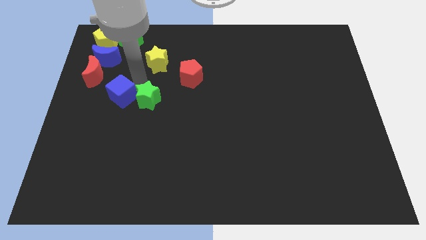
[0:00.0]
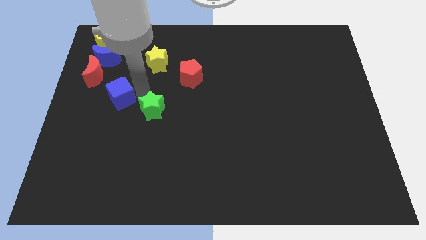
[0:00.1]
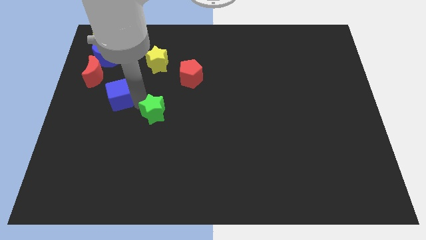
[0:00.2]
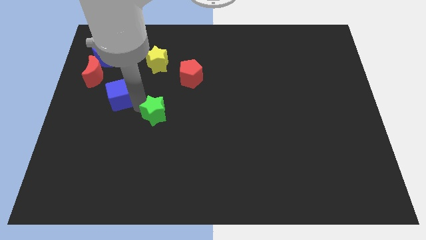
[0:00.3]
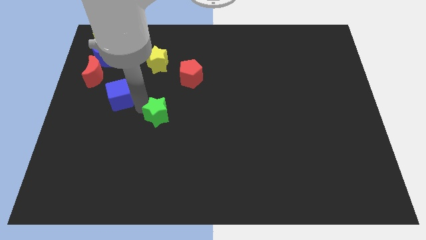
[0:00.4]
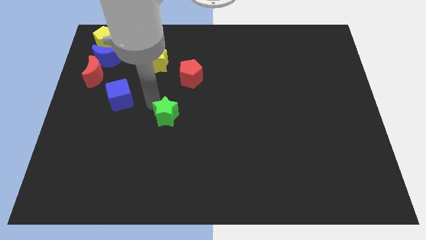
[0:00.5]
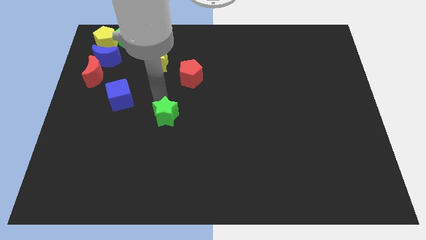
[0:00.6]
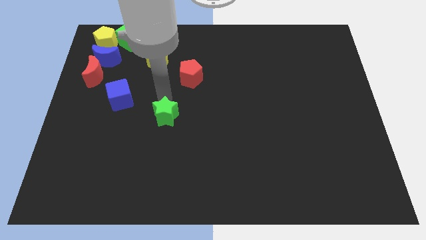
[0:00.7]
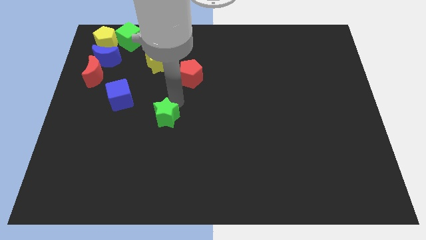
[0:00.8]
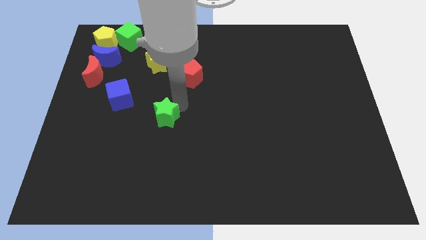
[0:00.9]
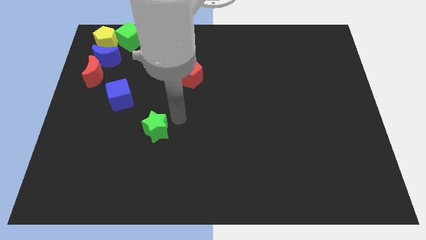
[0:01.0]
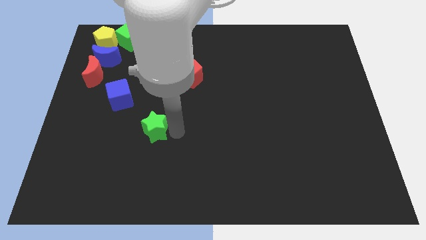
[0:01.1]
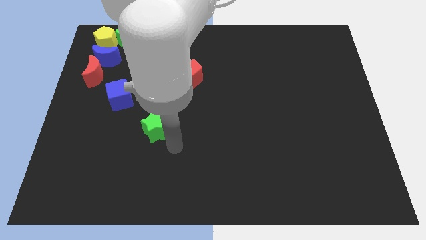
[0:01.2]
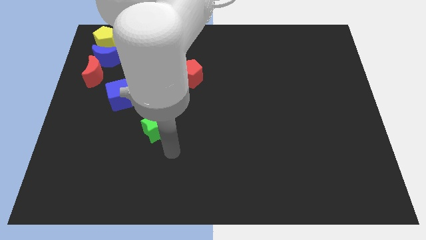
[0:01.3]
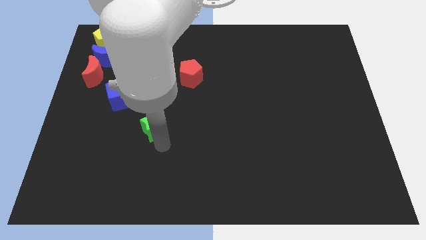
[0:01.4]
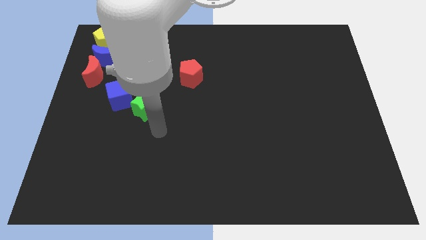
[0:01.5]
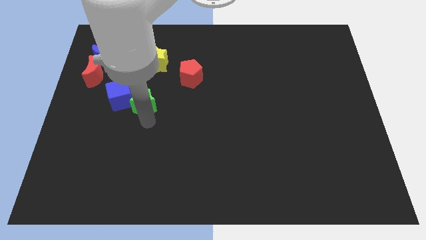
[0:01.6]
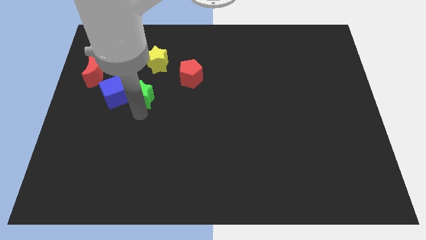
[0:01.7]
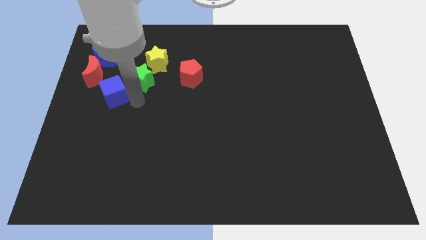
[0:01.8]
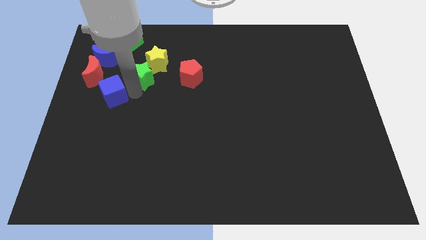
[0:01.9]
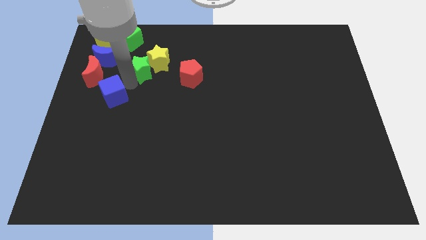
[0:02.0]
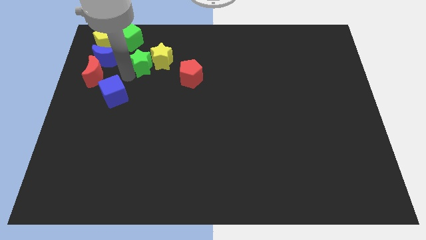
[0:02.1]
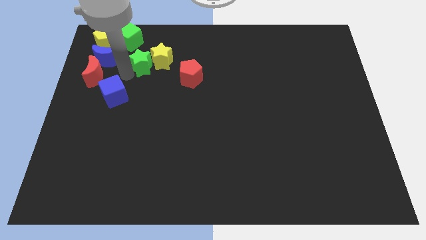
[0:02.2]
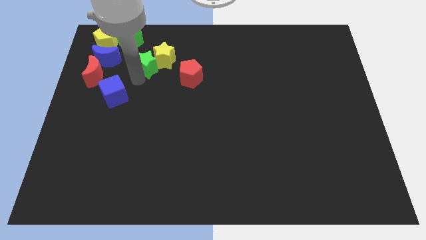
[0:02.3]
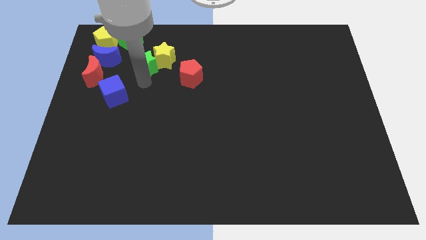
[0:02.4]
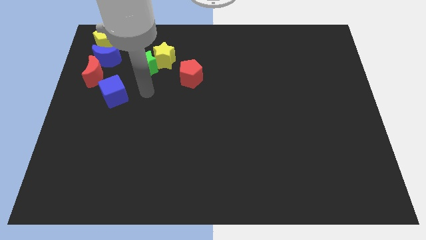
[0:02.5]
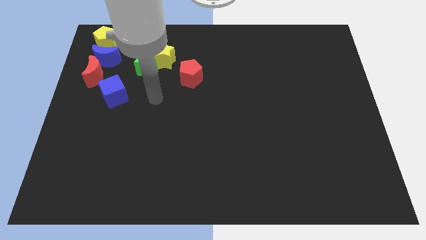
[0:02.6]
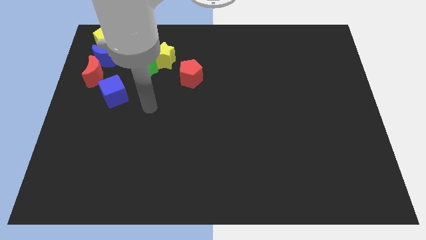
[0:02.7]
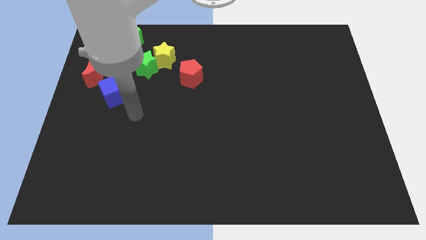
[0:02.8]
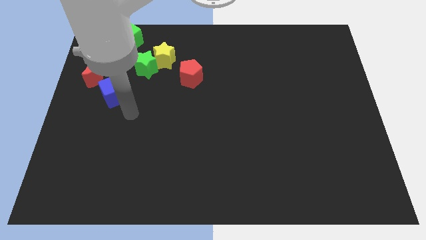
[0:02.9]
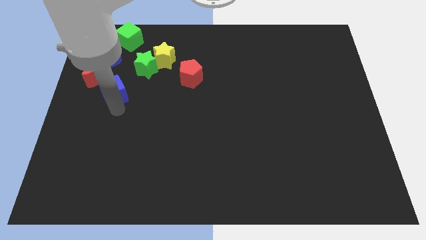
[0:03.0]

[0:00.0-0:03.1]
move the green star below the green cube

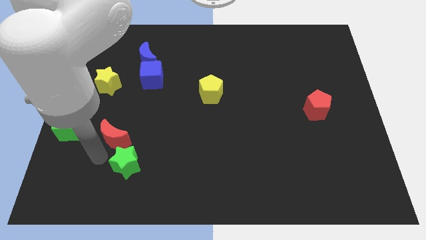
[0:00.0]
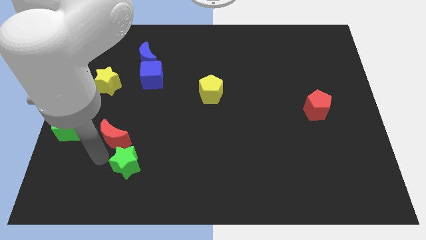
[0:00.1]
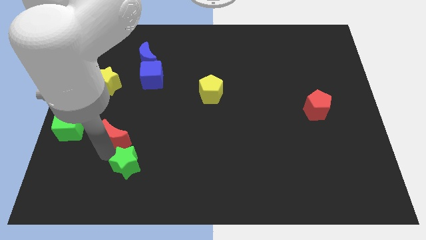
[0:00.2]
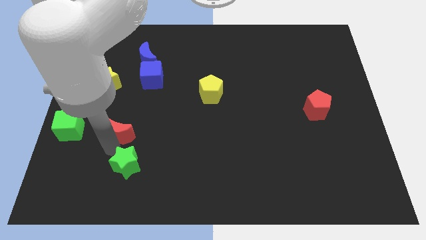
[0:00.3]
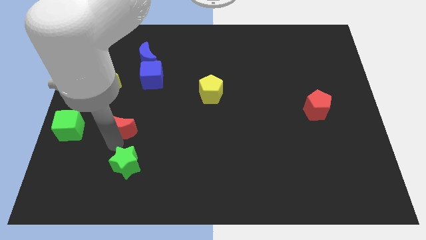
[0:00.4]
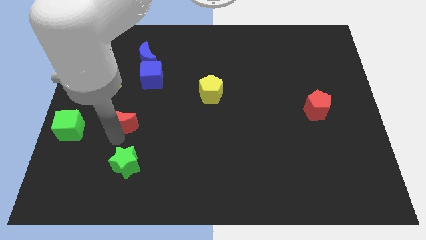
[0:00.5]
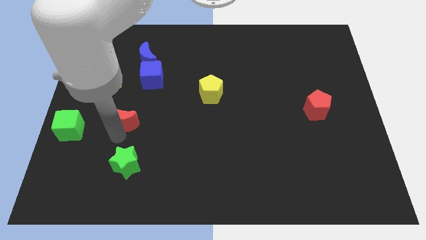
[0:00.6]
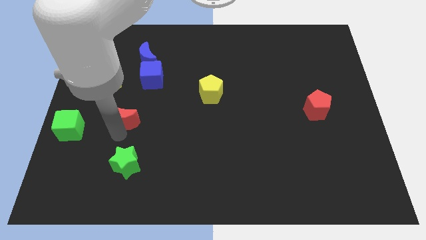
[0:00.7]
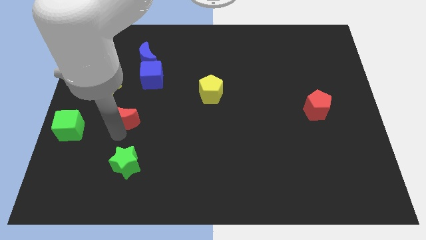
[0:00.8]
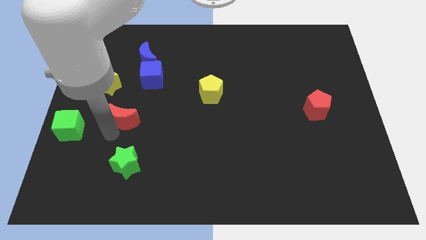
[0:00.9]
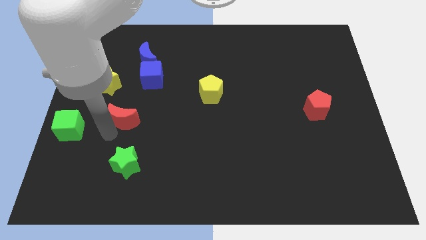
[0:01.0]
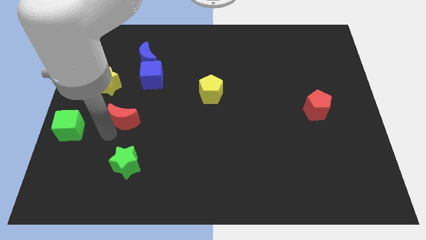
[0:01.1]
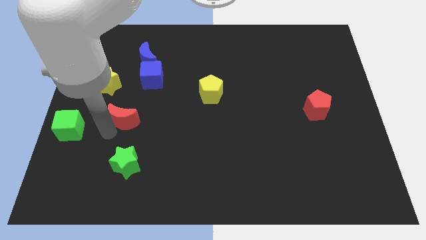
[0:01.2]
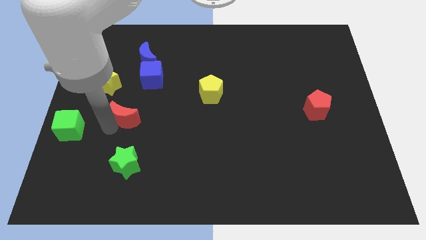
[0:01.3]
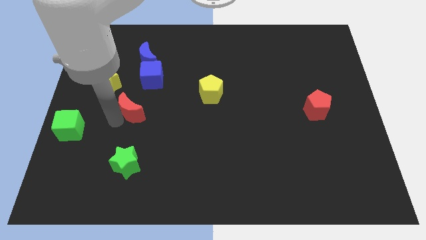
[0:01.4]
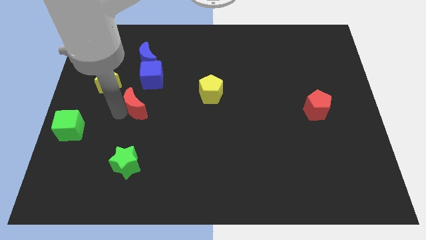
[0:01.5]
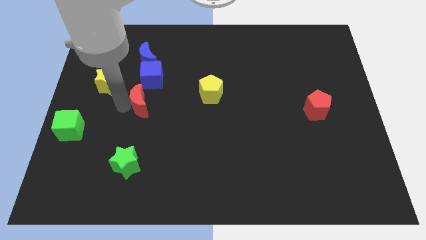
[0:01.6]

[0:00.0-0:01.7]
move the red crescent away from the green star

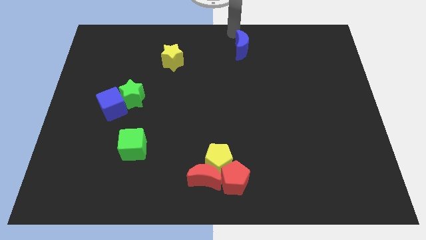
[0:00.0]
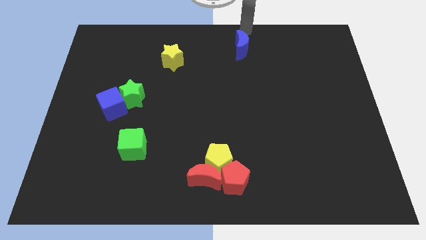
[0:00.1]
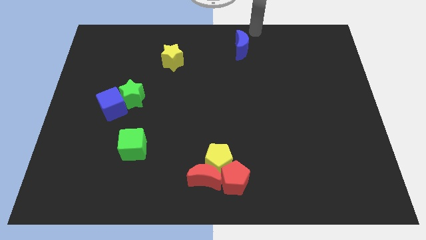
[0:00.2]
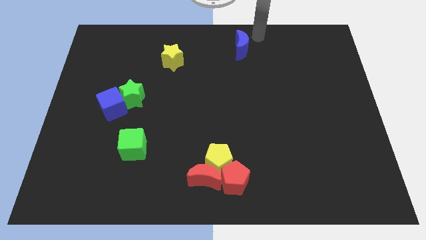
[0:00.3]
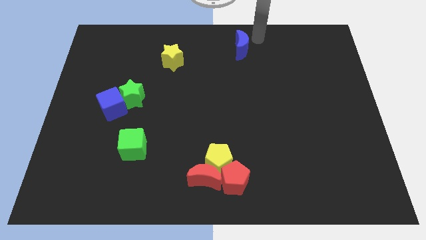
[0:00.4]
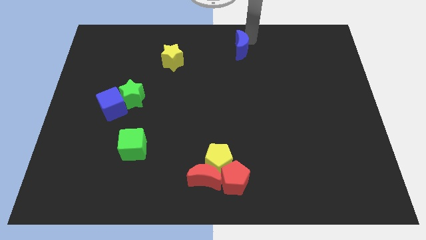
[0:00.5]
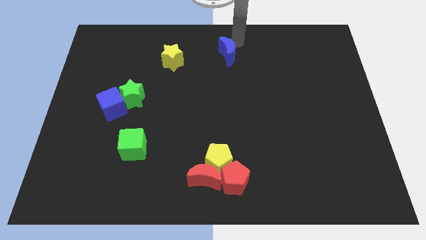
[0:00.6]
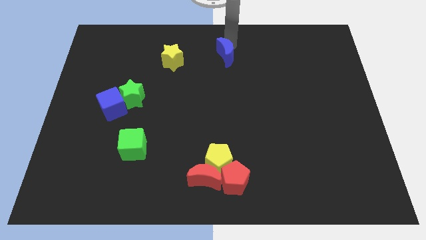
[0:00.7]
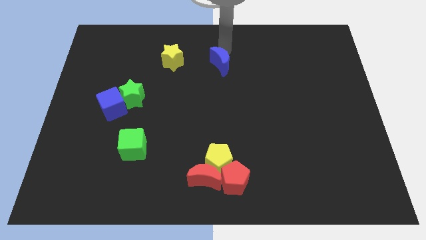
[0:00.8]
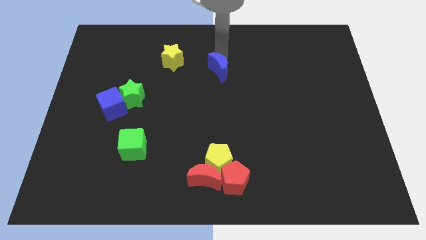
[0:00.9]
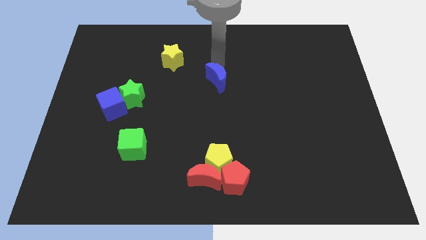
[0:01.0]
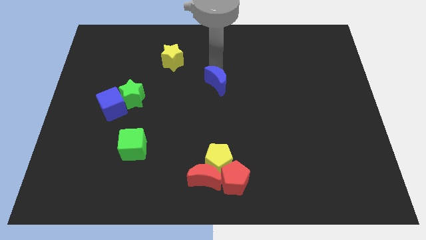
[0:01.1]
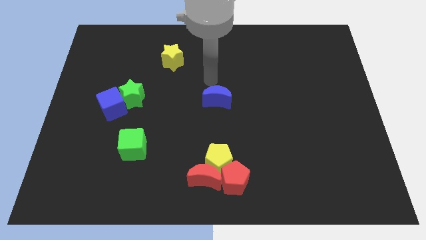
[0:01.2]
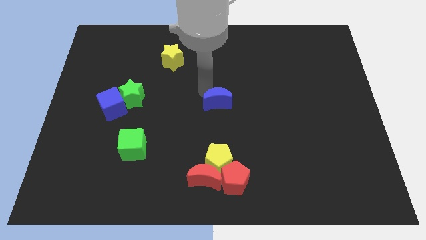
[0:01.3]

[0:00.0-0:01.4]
push the blue crescent to the center of the board

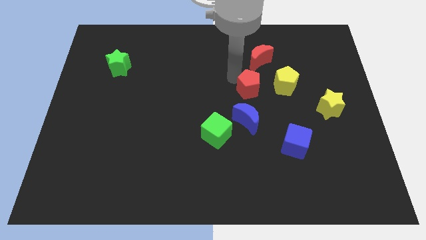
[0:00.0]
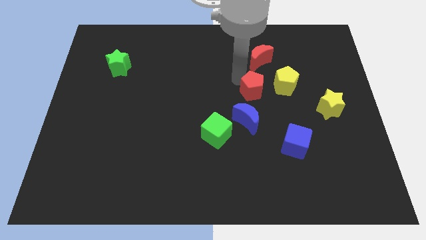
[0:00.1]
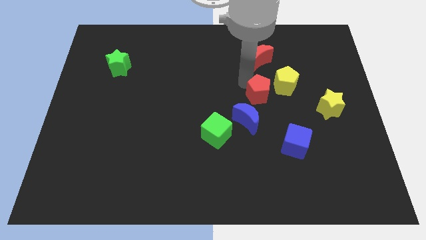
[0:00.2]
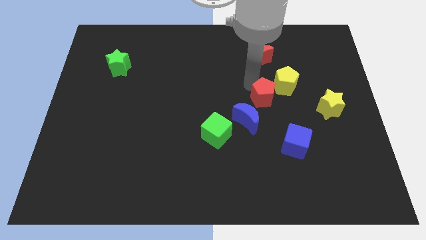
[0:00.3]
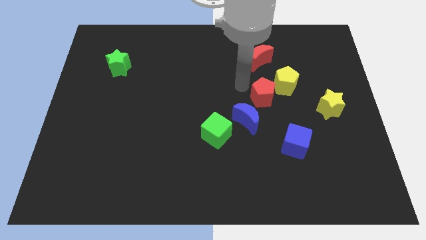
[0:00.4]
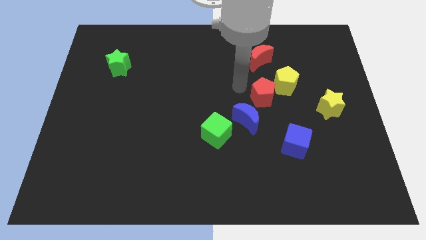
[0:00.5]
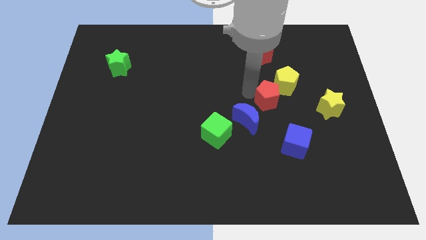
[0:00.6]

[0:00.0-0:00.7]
place red pentagon close to yellow pentagon

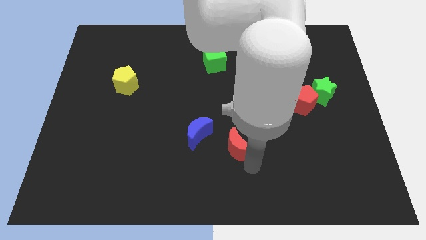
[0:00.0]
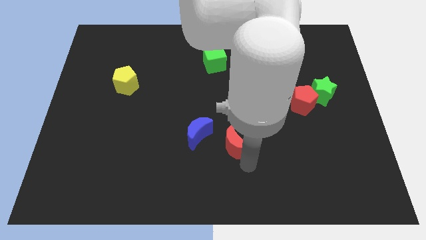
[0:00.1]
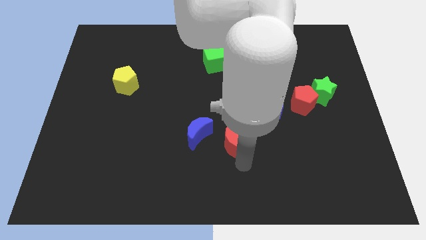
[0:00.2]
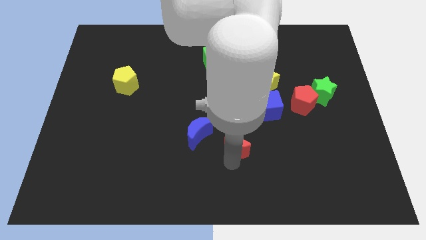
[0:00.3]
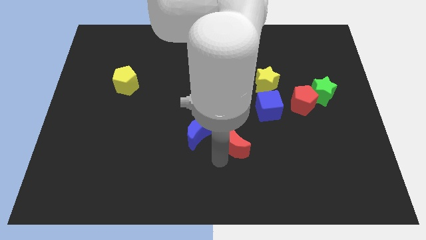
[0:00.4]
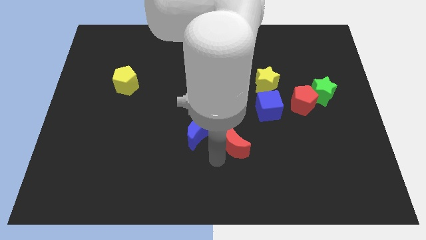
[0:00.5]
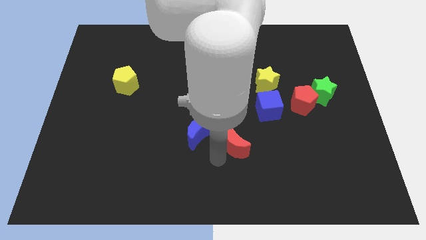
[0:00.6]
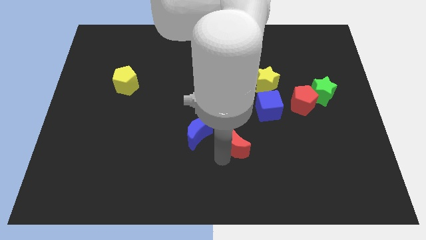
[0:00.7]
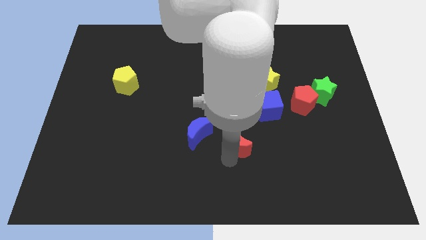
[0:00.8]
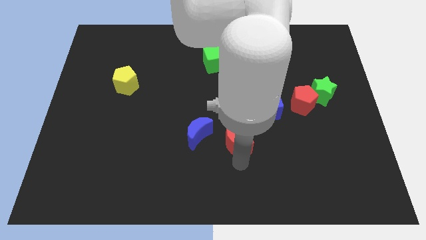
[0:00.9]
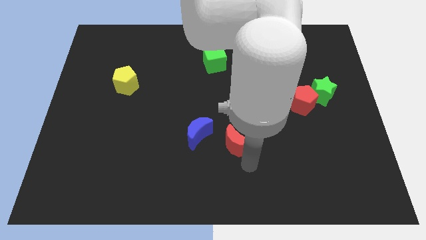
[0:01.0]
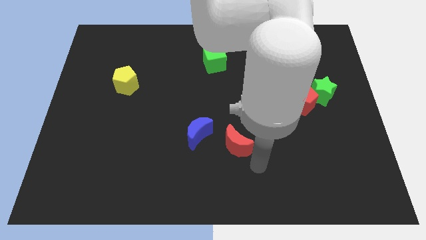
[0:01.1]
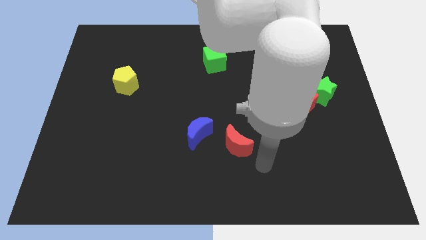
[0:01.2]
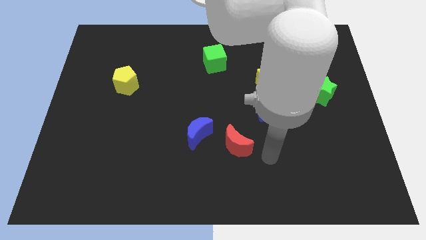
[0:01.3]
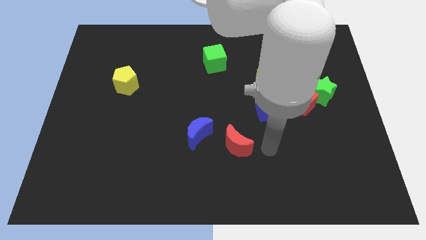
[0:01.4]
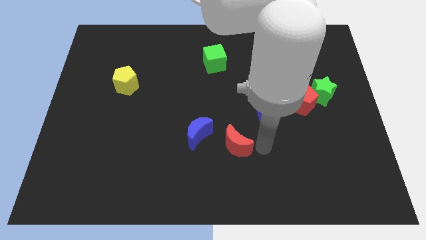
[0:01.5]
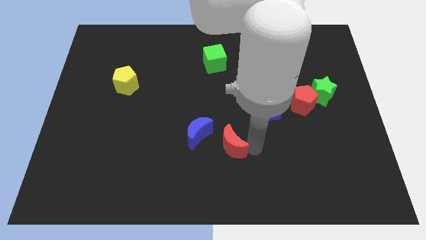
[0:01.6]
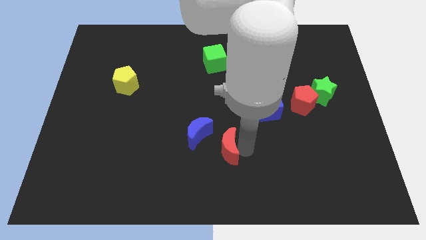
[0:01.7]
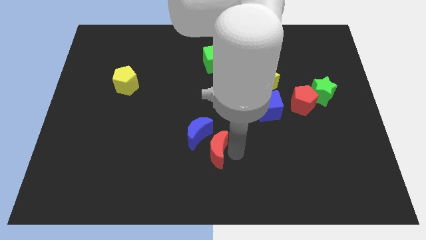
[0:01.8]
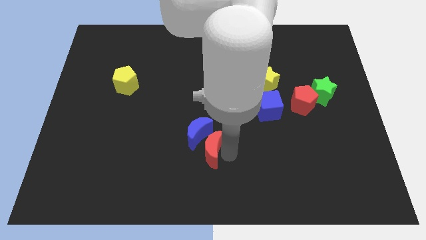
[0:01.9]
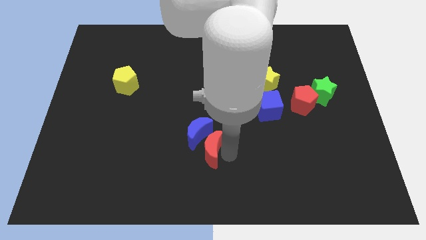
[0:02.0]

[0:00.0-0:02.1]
place the red crescent to the bottom of blue crescent

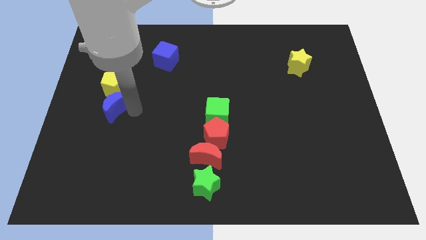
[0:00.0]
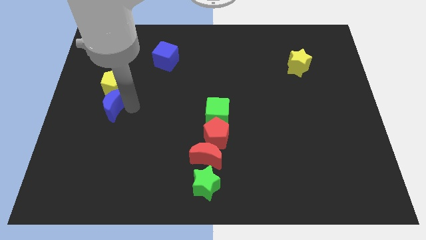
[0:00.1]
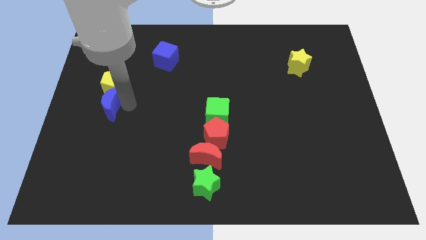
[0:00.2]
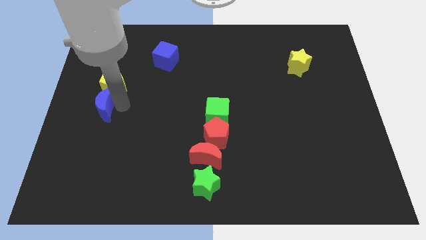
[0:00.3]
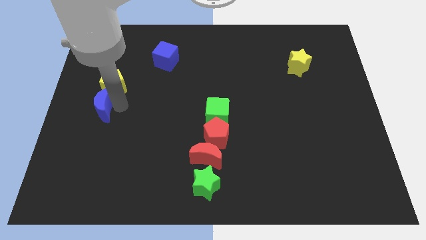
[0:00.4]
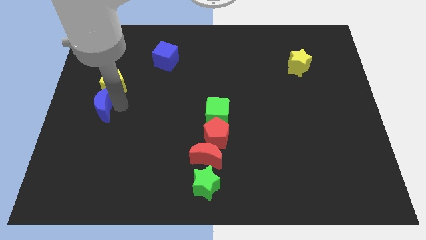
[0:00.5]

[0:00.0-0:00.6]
place the blue moon to the bottom of yellow pentagon
